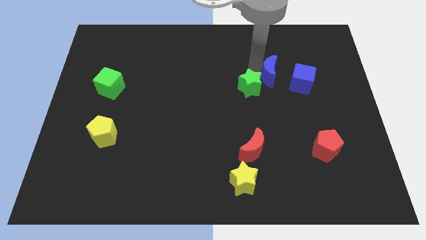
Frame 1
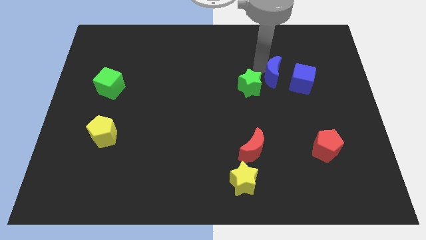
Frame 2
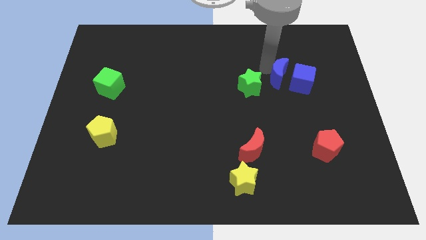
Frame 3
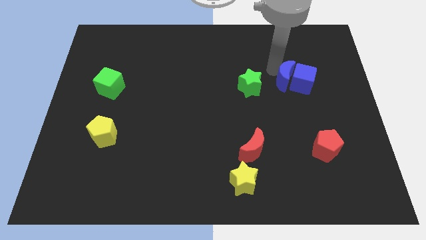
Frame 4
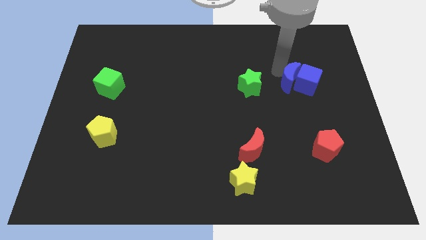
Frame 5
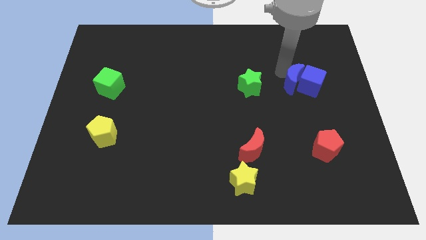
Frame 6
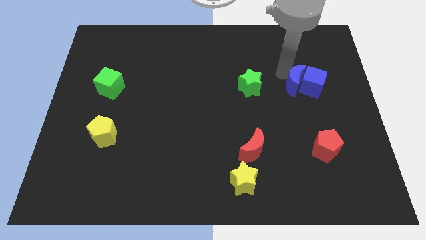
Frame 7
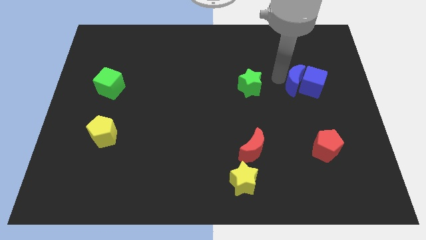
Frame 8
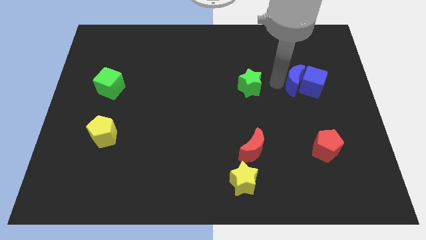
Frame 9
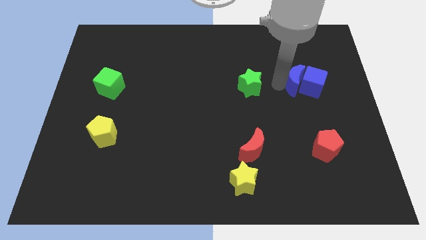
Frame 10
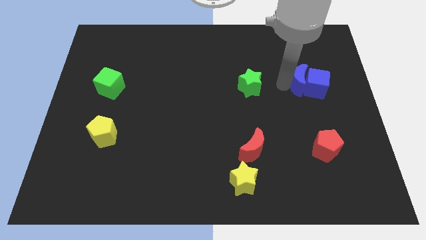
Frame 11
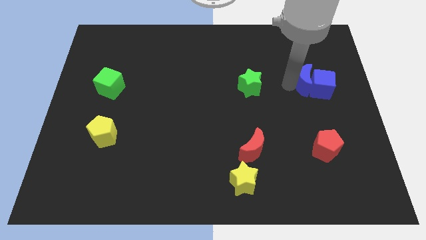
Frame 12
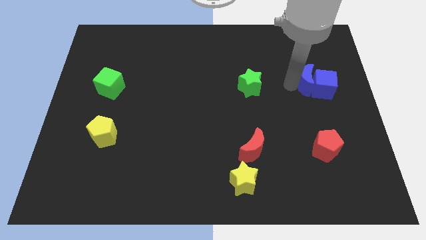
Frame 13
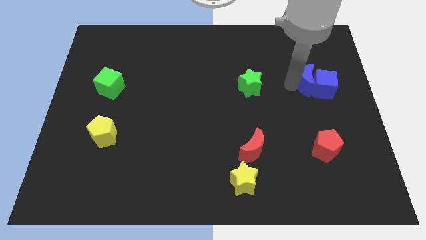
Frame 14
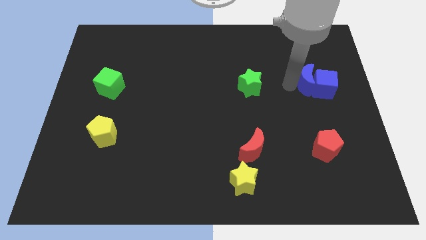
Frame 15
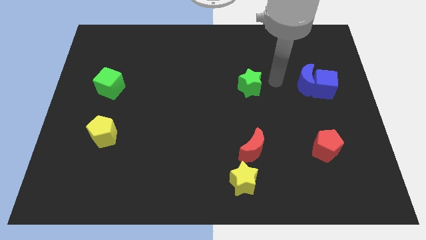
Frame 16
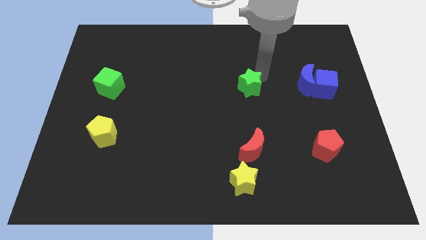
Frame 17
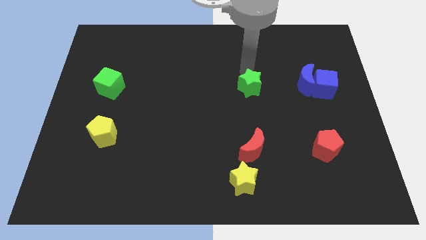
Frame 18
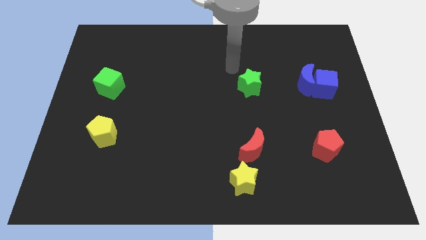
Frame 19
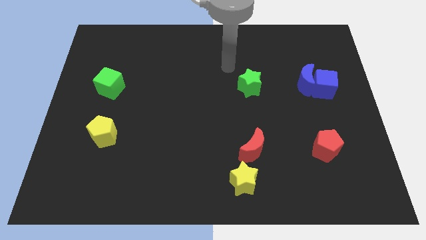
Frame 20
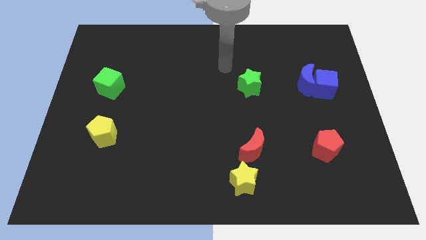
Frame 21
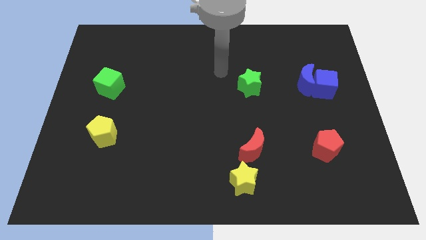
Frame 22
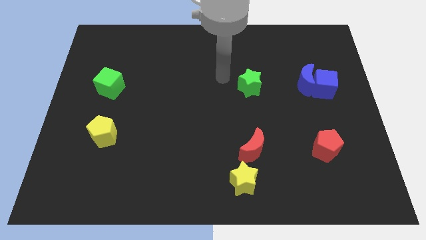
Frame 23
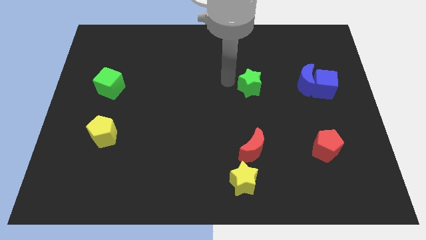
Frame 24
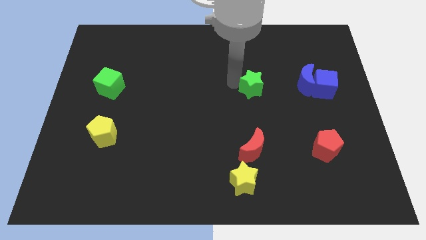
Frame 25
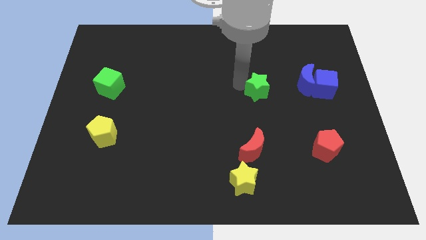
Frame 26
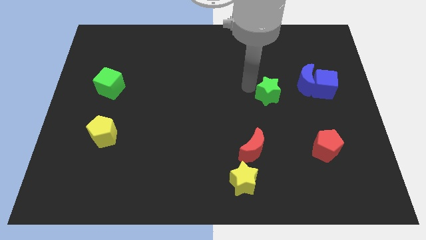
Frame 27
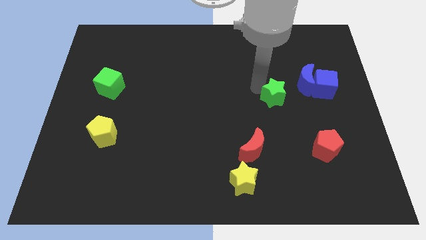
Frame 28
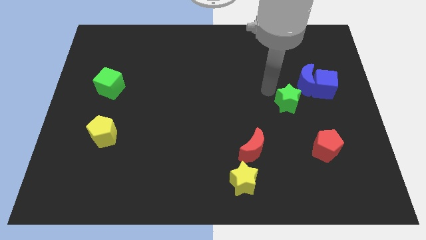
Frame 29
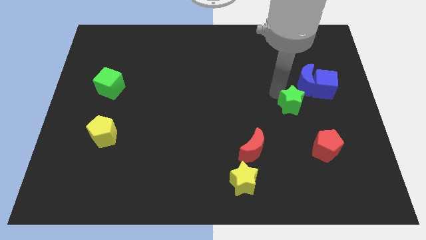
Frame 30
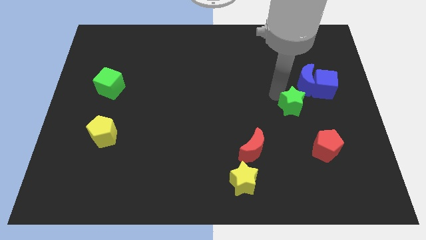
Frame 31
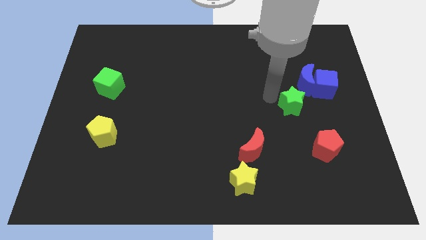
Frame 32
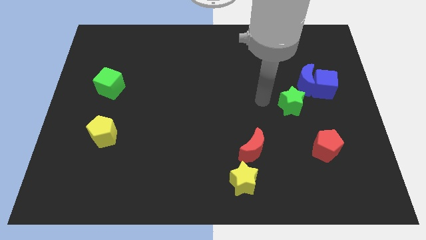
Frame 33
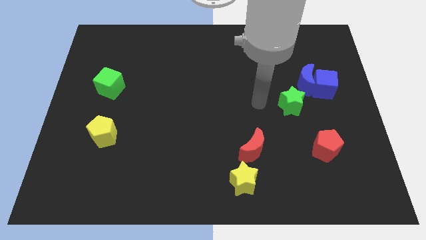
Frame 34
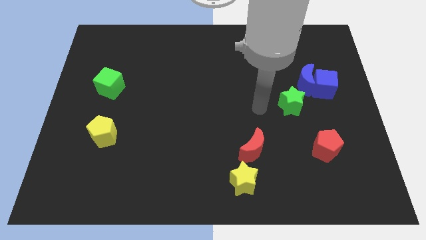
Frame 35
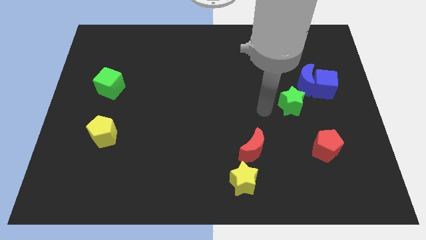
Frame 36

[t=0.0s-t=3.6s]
push the blue moon into the blue cube

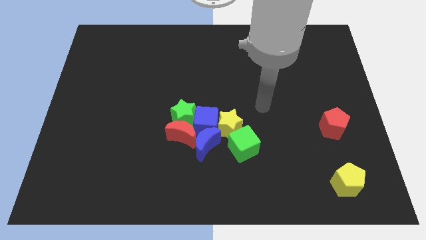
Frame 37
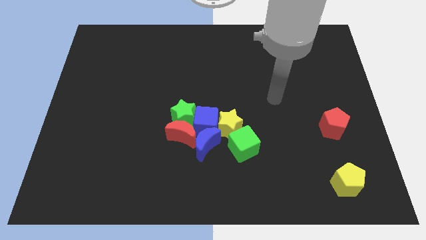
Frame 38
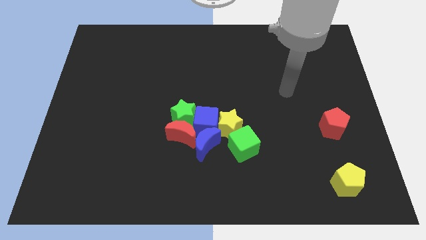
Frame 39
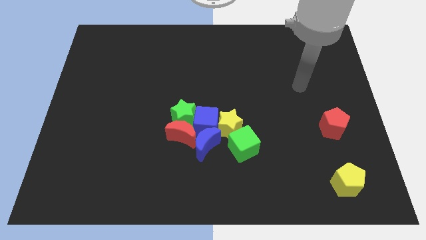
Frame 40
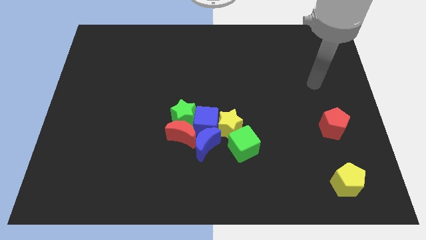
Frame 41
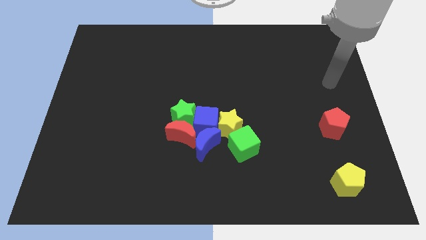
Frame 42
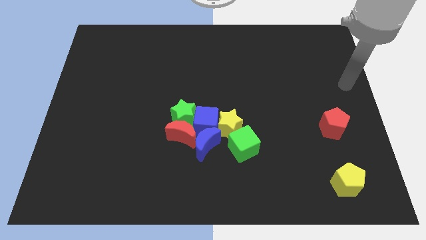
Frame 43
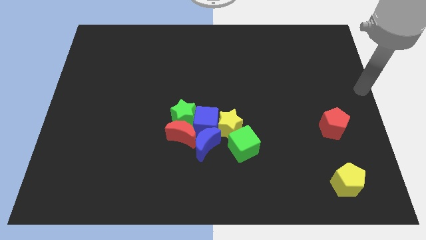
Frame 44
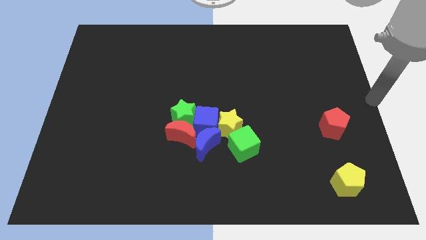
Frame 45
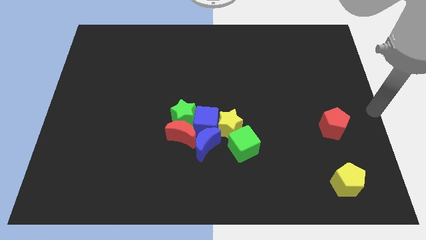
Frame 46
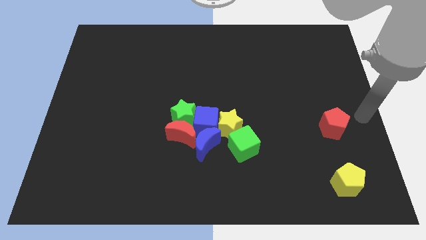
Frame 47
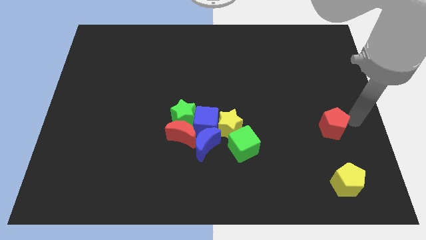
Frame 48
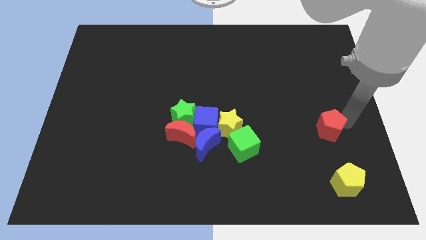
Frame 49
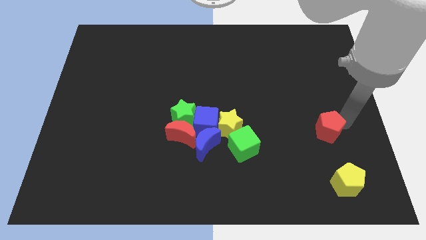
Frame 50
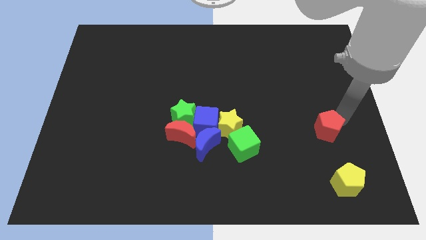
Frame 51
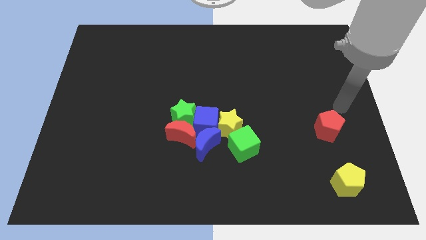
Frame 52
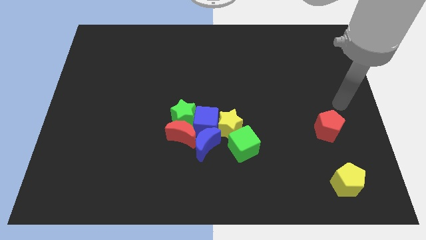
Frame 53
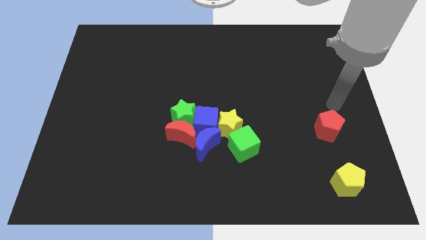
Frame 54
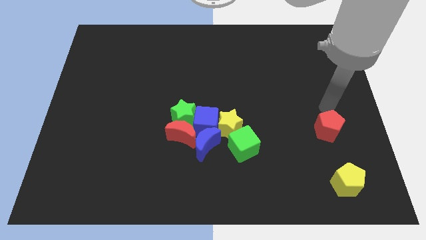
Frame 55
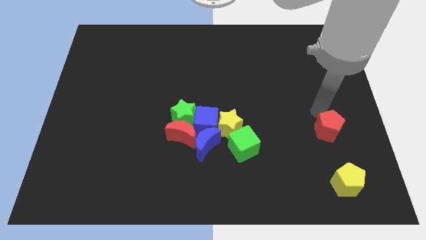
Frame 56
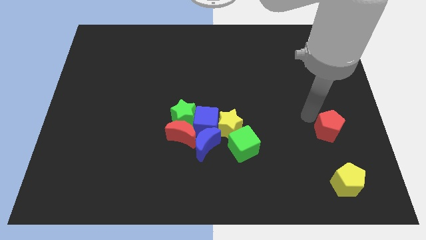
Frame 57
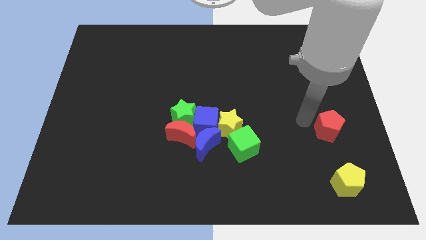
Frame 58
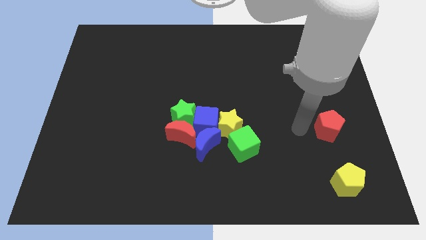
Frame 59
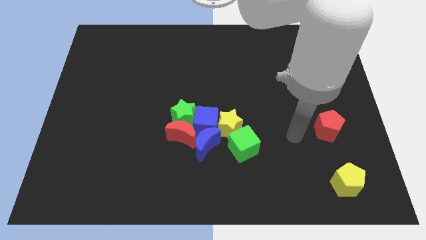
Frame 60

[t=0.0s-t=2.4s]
slightly push the red pentagon to the left

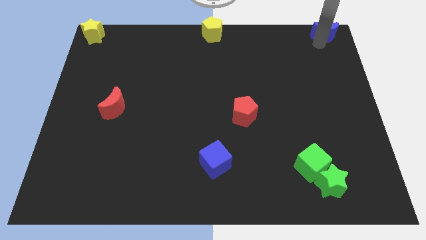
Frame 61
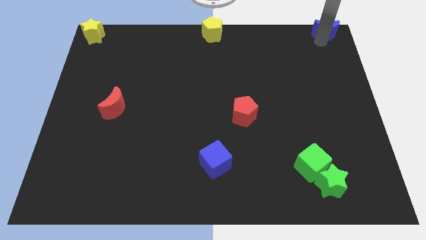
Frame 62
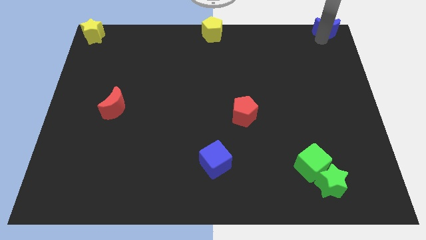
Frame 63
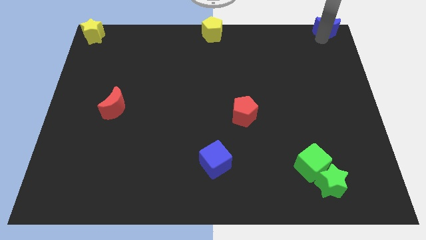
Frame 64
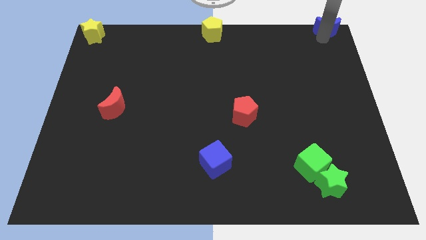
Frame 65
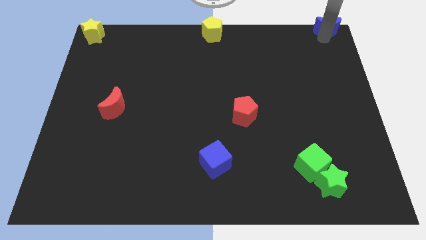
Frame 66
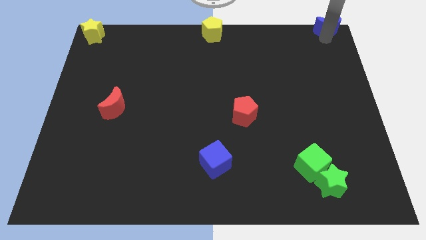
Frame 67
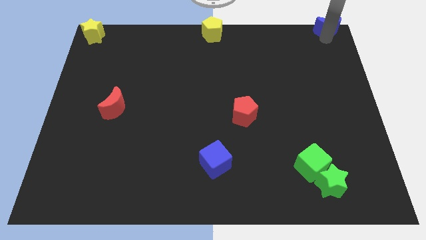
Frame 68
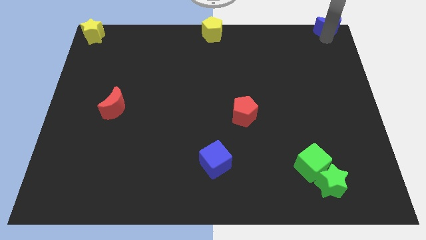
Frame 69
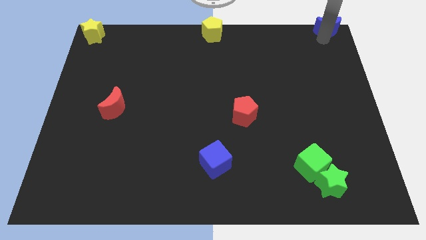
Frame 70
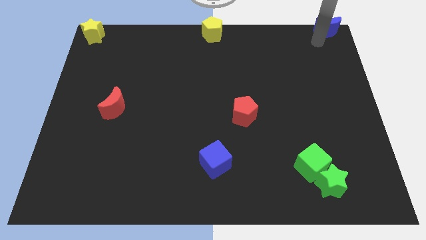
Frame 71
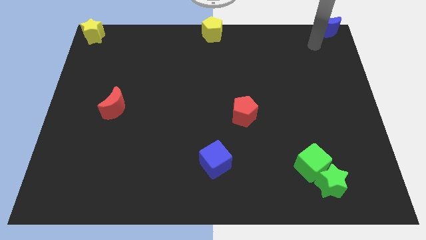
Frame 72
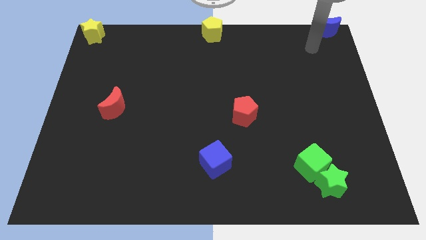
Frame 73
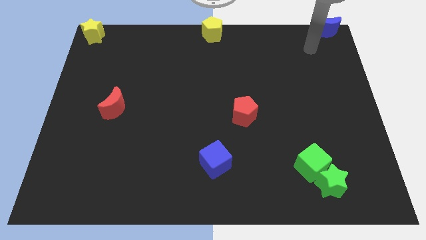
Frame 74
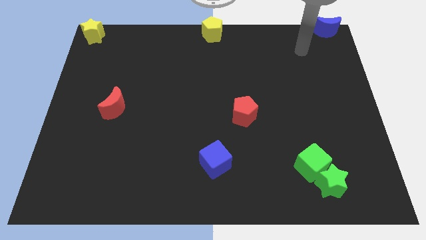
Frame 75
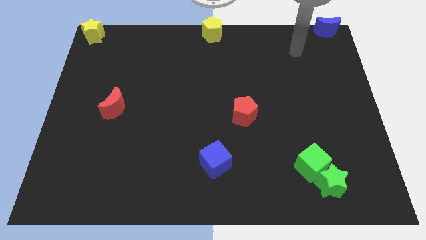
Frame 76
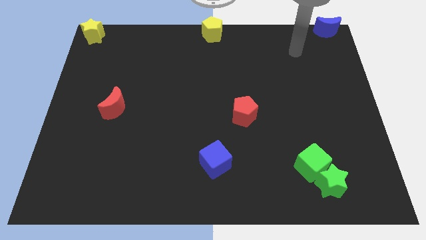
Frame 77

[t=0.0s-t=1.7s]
put the blue moon at the top right corner

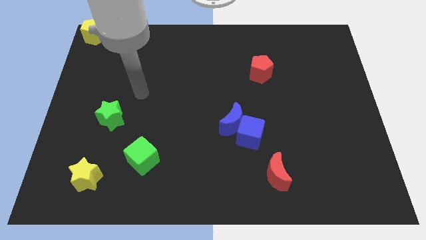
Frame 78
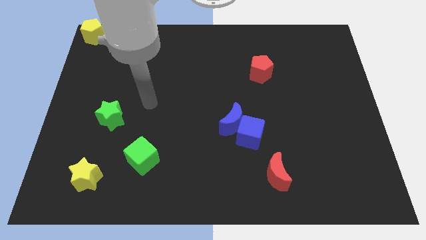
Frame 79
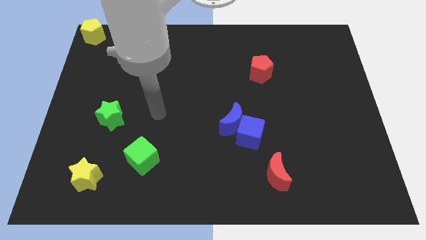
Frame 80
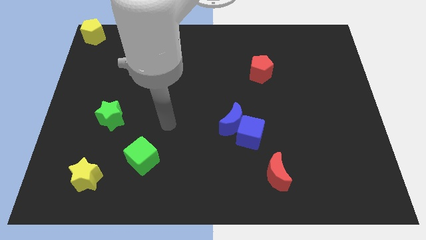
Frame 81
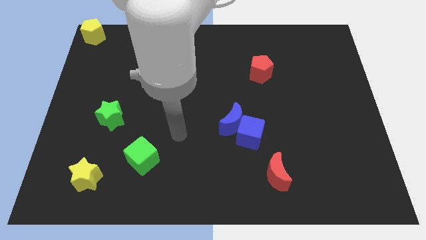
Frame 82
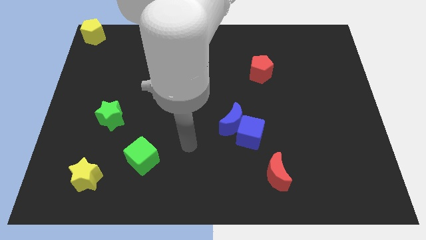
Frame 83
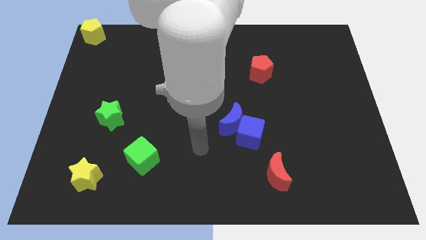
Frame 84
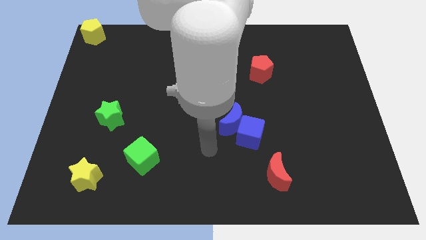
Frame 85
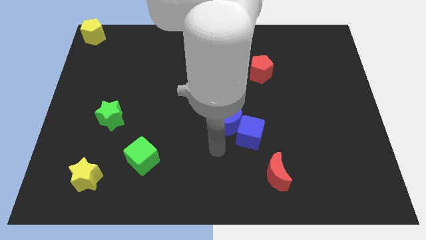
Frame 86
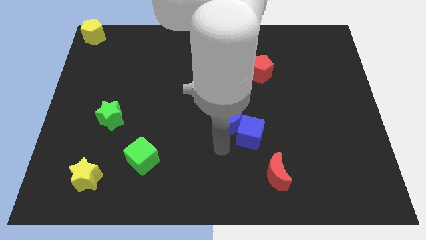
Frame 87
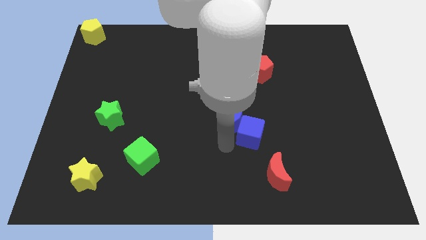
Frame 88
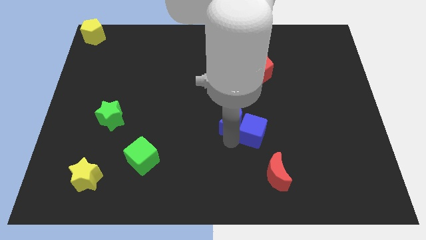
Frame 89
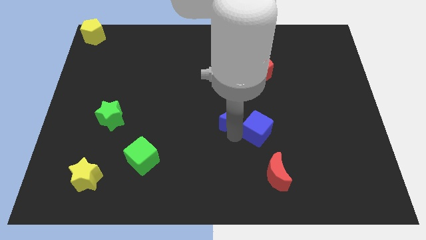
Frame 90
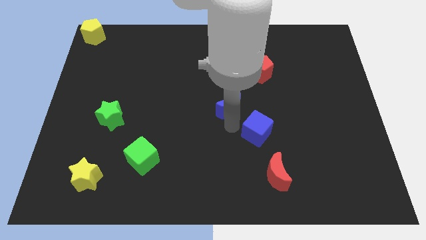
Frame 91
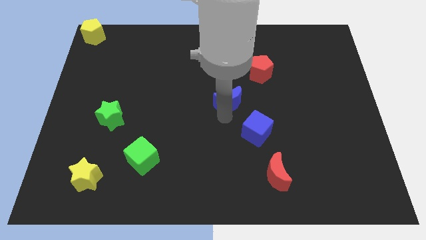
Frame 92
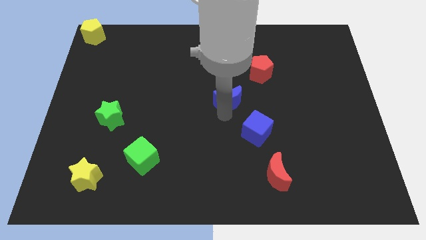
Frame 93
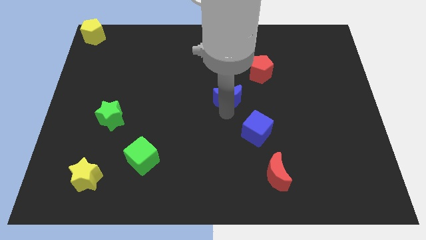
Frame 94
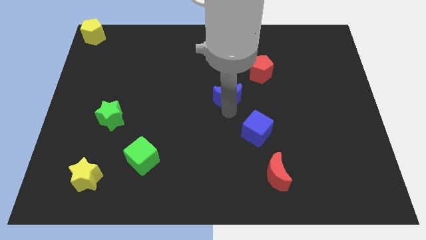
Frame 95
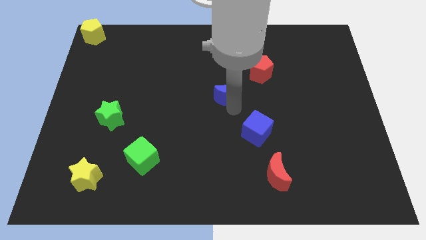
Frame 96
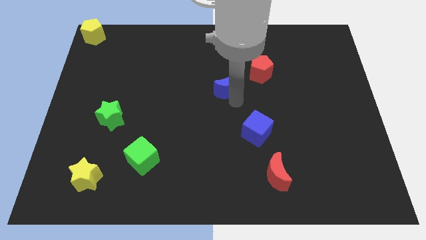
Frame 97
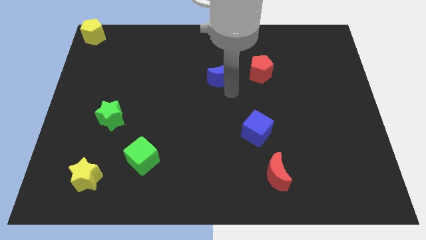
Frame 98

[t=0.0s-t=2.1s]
move blue moon to the left of red pentagon
